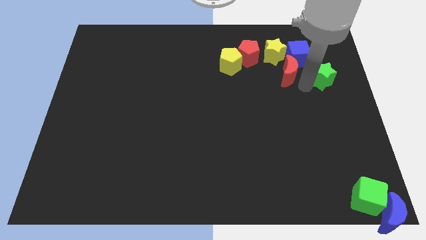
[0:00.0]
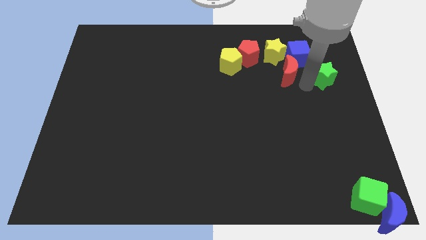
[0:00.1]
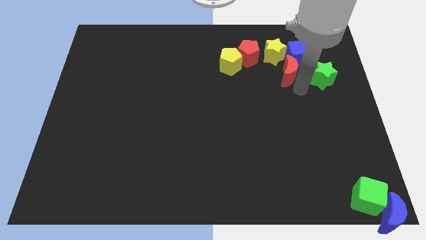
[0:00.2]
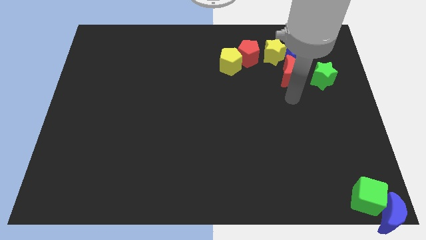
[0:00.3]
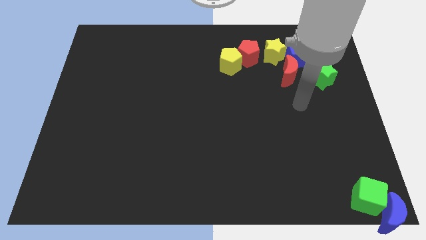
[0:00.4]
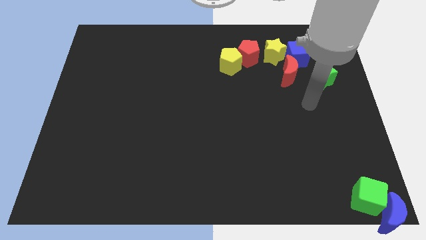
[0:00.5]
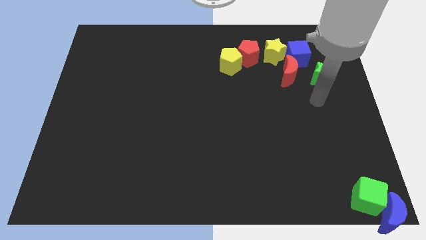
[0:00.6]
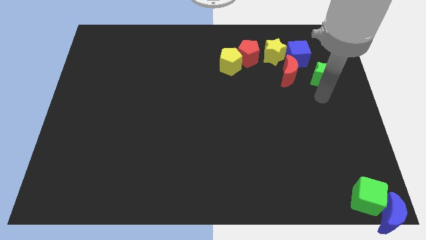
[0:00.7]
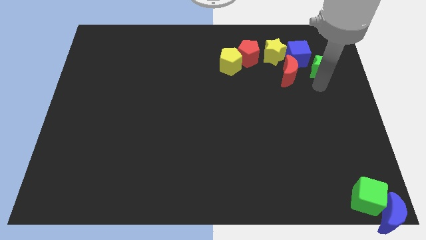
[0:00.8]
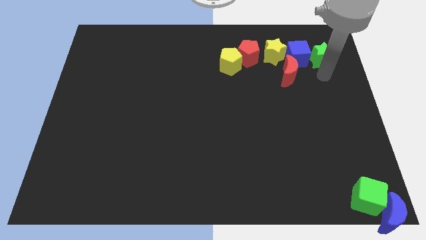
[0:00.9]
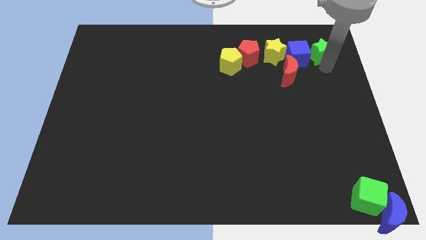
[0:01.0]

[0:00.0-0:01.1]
put the green star to the right of the blue cube

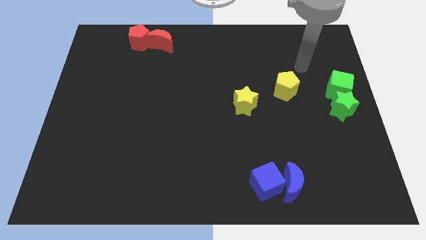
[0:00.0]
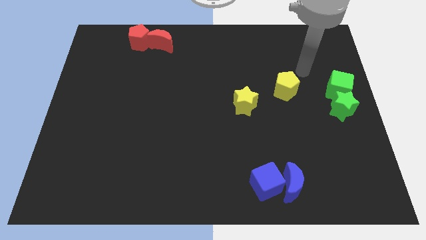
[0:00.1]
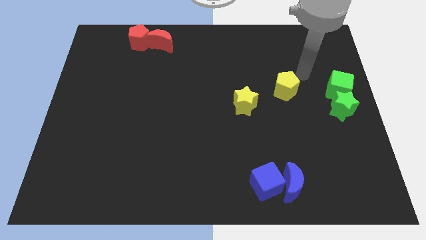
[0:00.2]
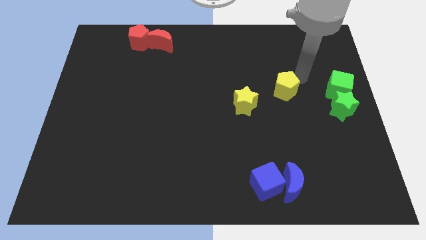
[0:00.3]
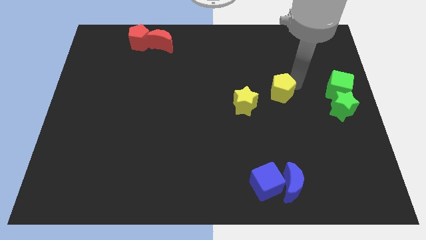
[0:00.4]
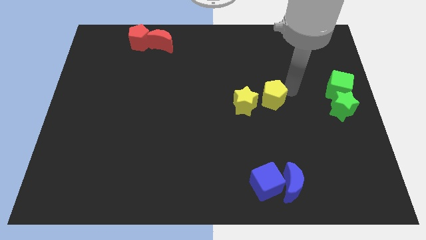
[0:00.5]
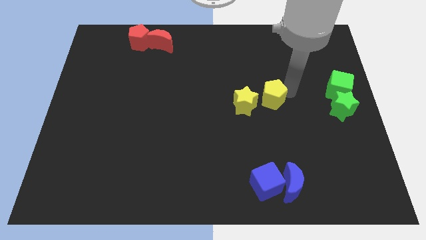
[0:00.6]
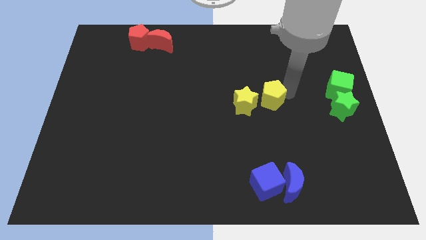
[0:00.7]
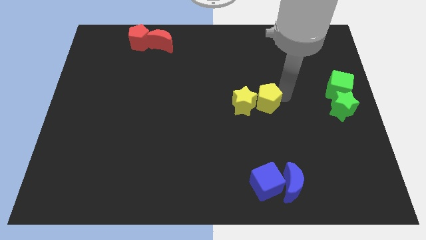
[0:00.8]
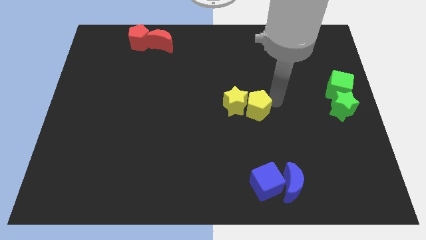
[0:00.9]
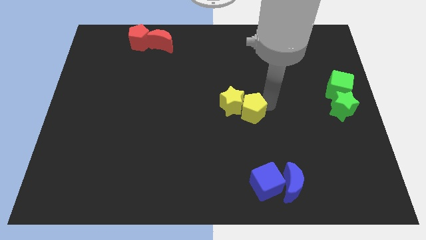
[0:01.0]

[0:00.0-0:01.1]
move the yellow pentagon into the yellow star

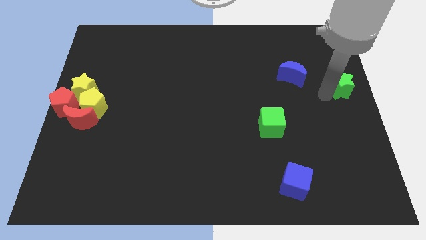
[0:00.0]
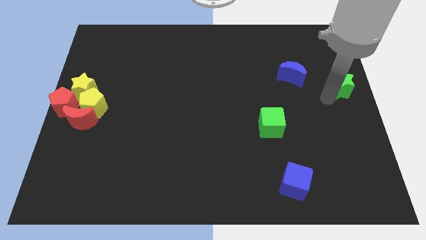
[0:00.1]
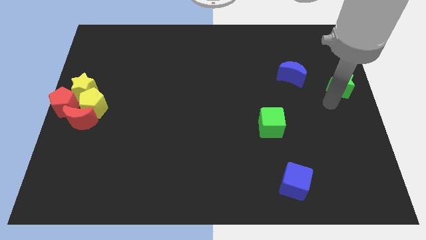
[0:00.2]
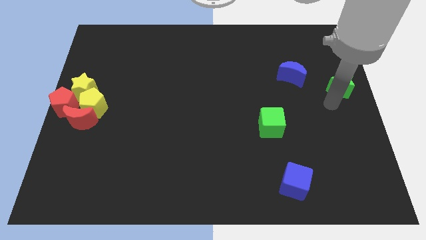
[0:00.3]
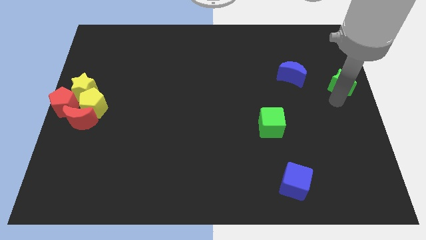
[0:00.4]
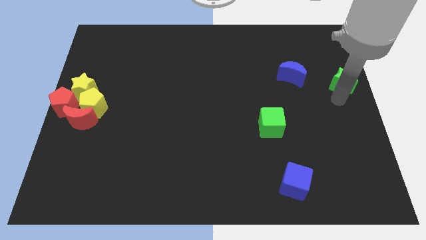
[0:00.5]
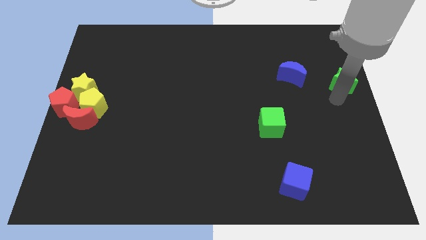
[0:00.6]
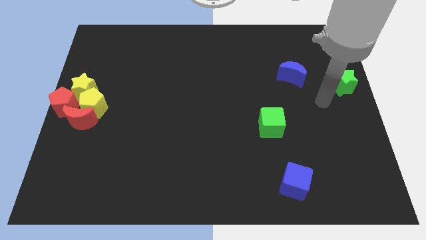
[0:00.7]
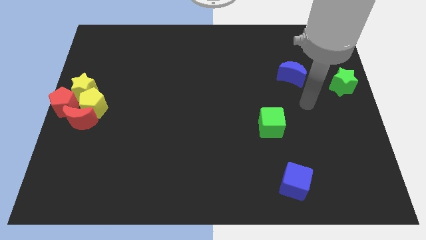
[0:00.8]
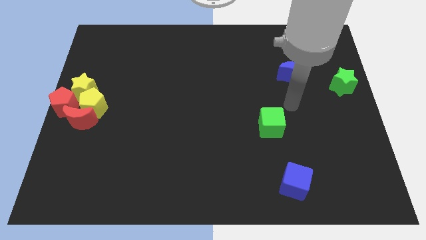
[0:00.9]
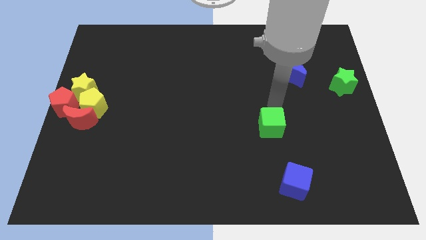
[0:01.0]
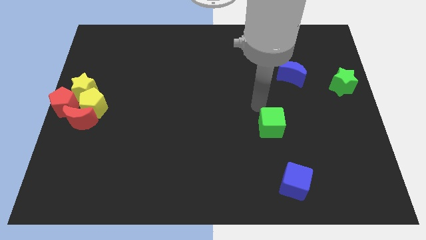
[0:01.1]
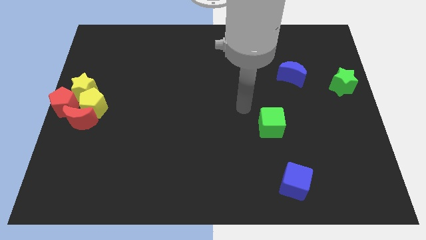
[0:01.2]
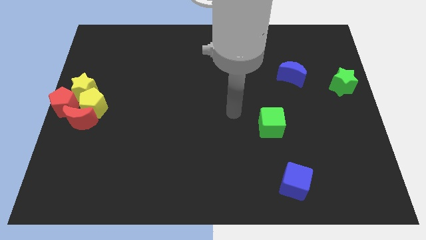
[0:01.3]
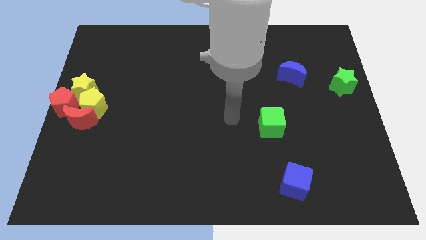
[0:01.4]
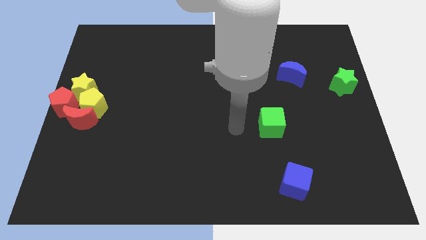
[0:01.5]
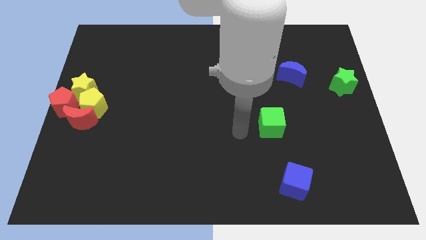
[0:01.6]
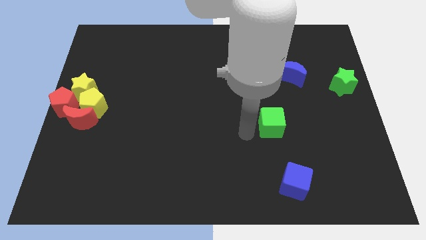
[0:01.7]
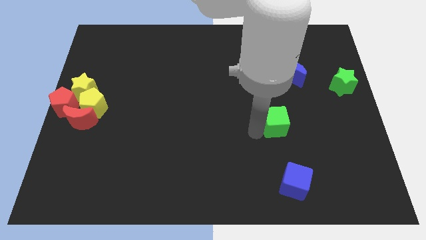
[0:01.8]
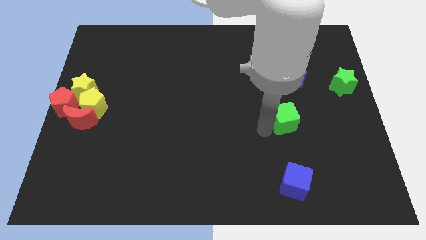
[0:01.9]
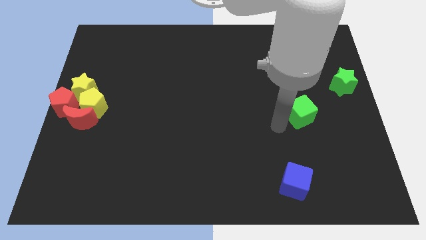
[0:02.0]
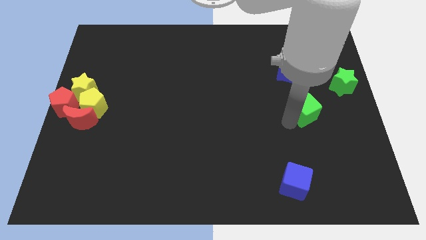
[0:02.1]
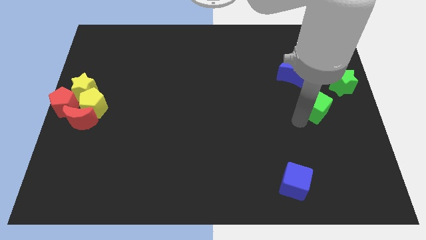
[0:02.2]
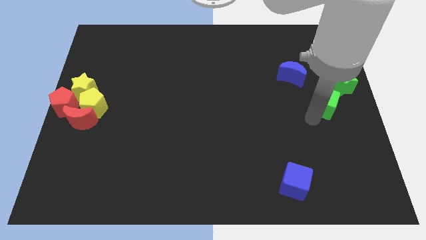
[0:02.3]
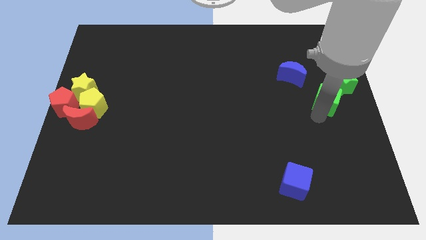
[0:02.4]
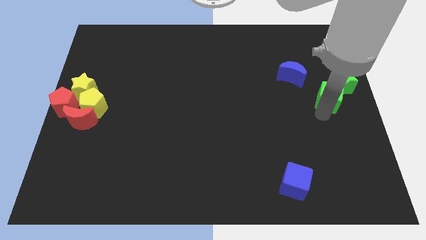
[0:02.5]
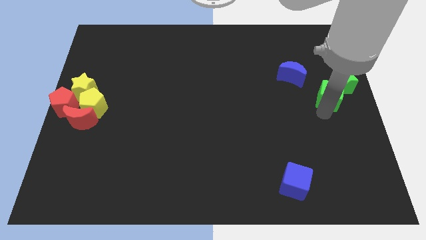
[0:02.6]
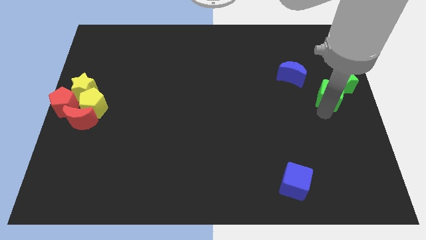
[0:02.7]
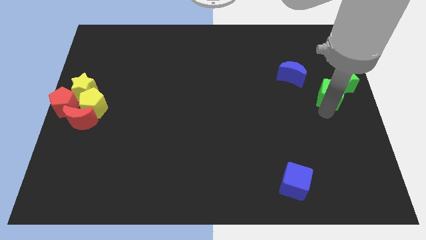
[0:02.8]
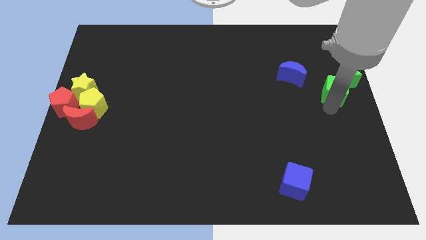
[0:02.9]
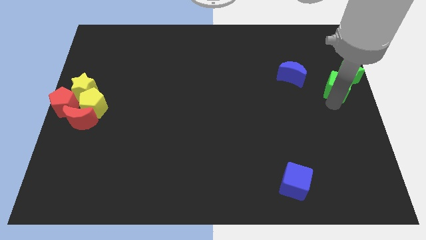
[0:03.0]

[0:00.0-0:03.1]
put the green cube into the green star

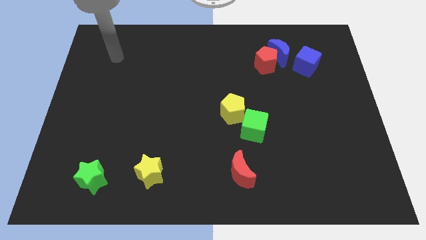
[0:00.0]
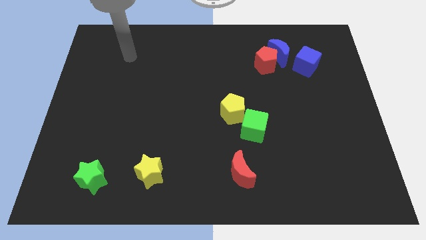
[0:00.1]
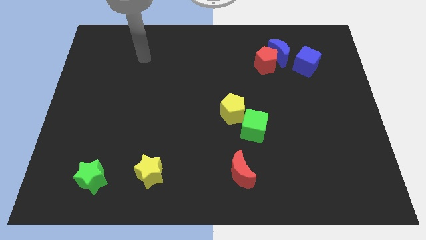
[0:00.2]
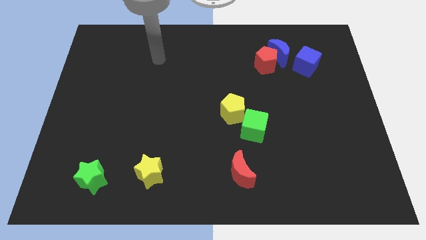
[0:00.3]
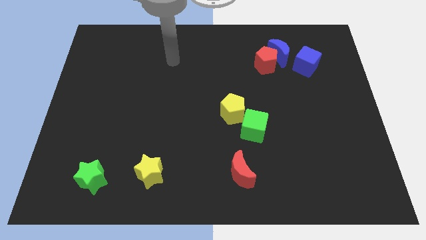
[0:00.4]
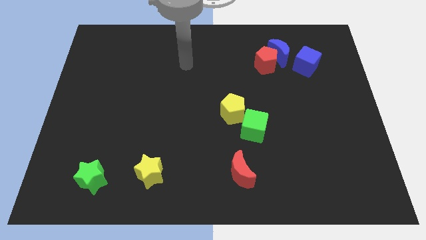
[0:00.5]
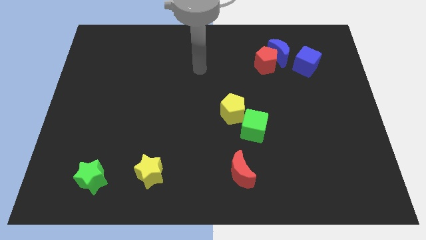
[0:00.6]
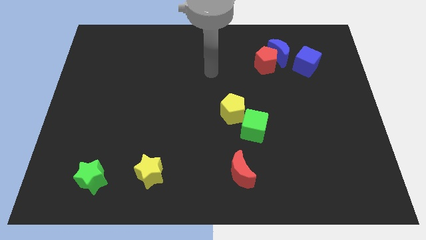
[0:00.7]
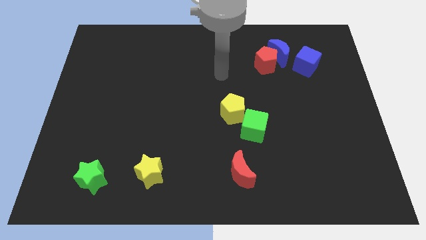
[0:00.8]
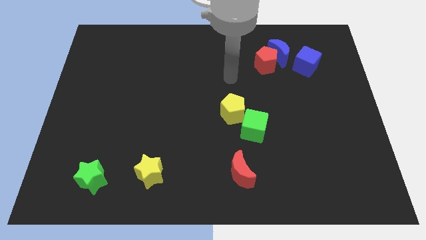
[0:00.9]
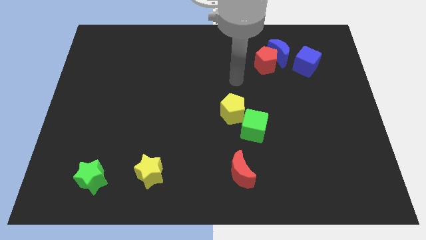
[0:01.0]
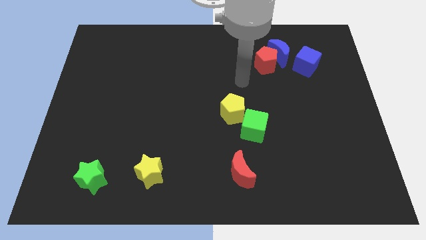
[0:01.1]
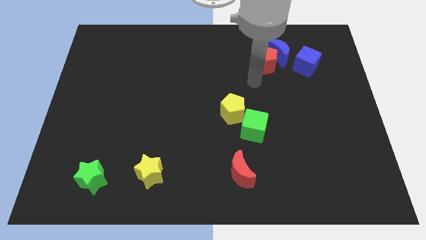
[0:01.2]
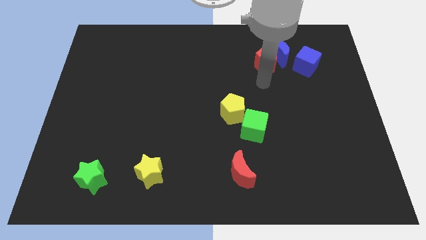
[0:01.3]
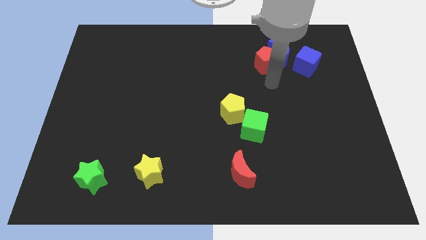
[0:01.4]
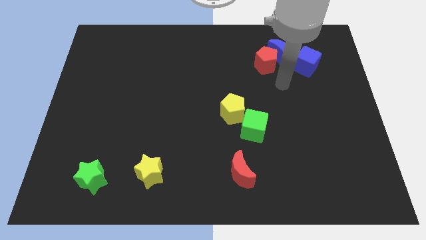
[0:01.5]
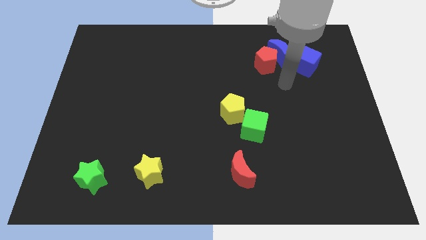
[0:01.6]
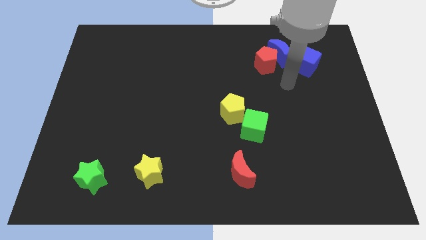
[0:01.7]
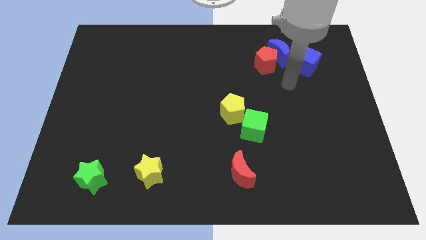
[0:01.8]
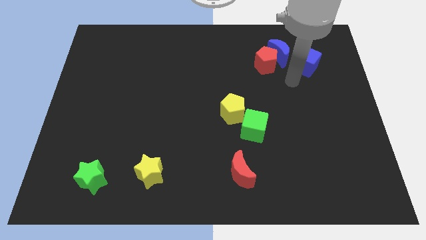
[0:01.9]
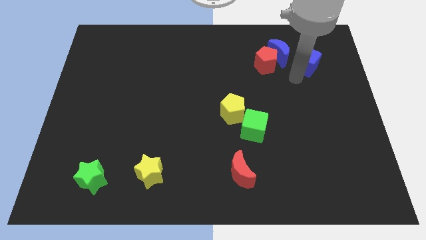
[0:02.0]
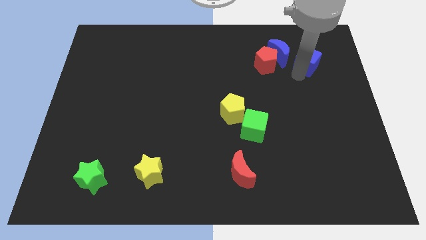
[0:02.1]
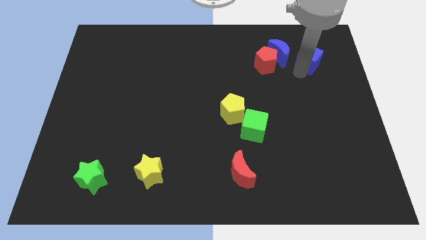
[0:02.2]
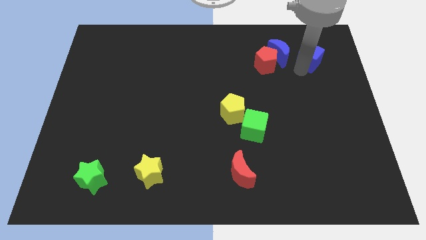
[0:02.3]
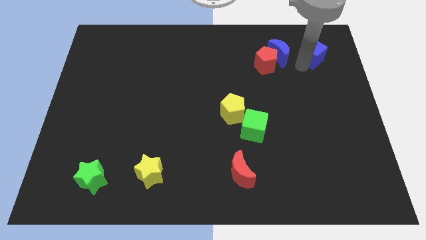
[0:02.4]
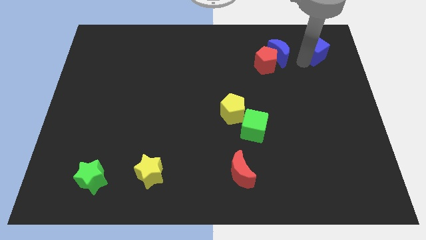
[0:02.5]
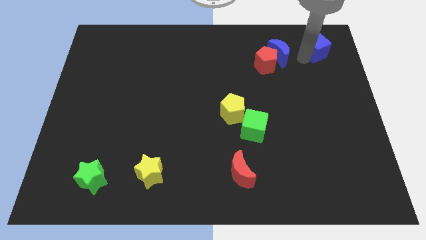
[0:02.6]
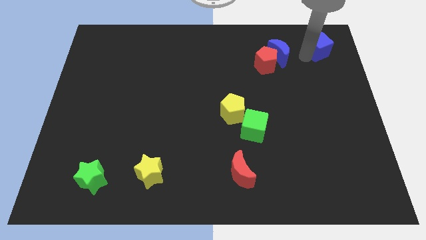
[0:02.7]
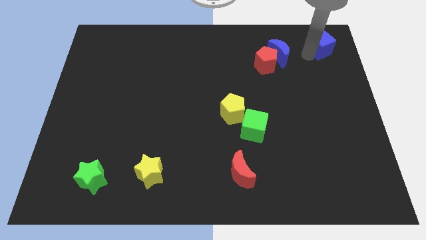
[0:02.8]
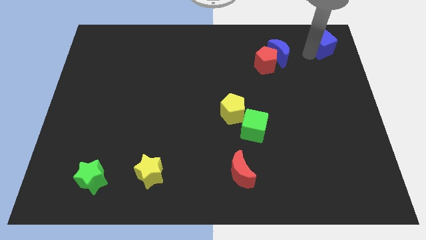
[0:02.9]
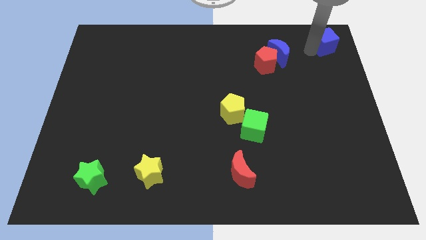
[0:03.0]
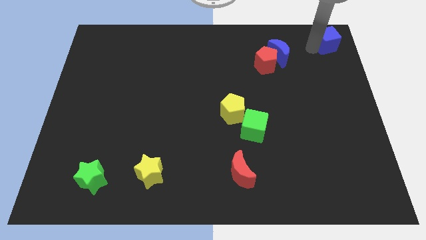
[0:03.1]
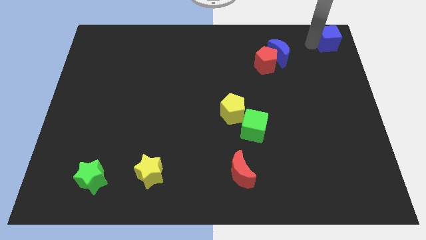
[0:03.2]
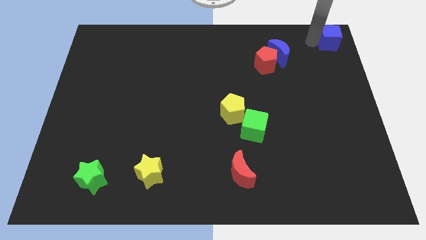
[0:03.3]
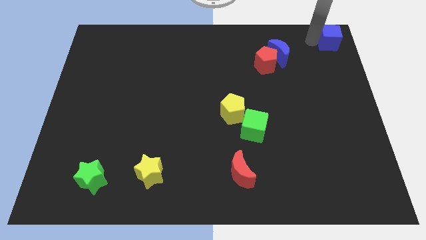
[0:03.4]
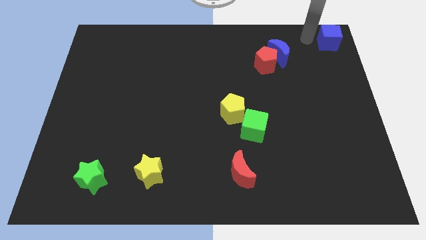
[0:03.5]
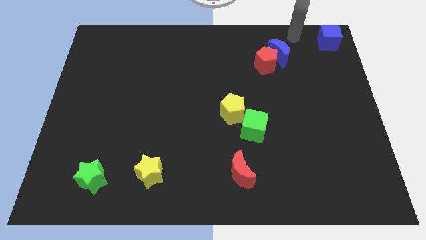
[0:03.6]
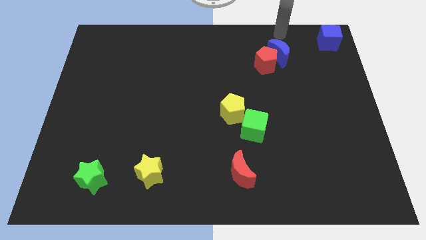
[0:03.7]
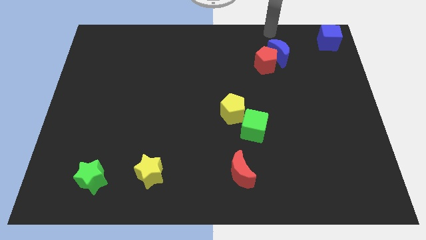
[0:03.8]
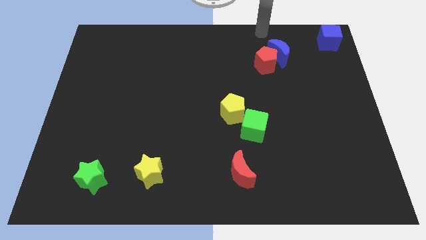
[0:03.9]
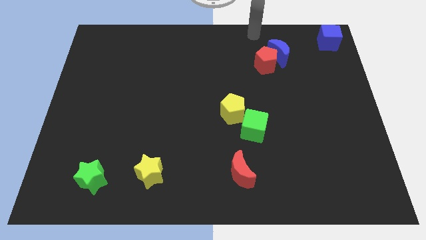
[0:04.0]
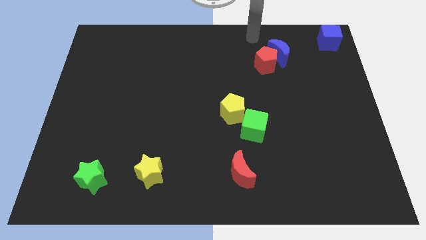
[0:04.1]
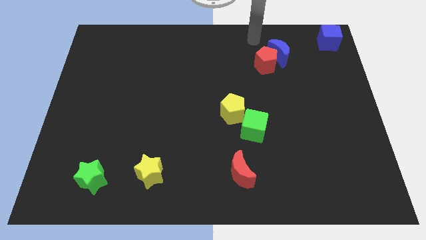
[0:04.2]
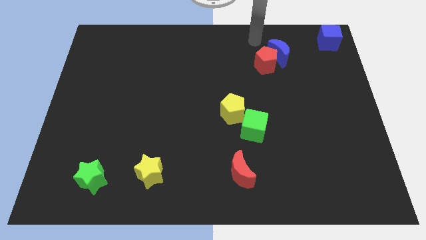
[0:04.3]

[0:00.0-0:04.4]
move the blue cube to the top right corner
